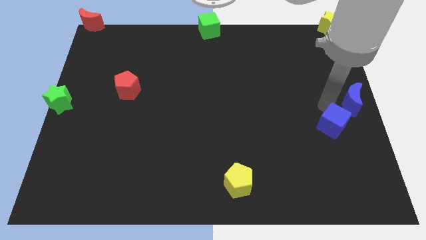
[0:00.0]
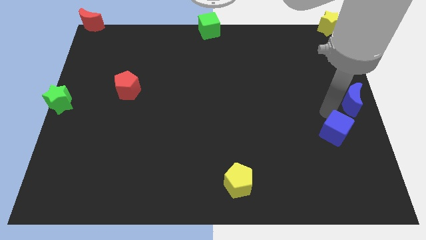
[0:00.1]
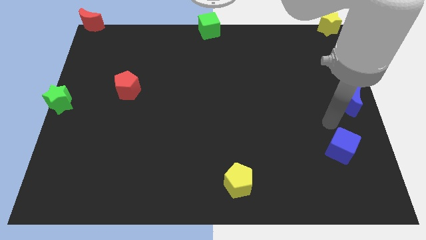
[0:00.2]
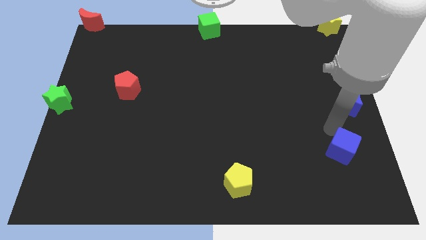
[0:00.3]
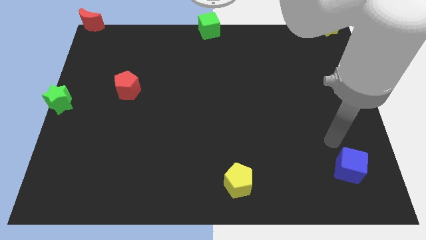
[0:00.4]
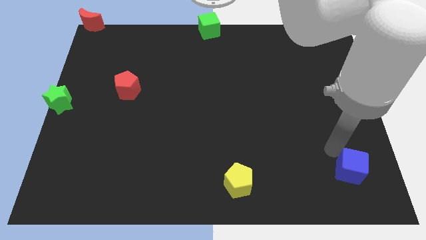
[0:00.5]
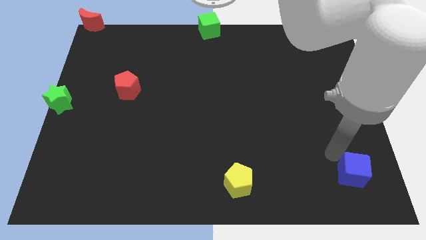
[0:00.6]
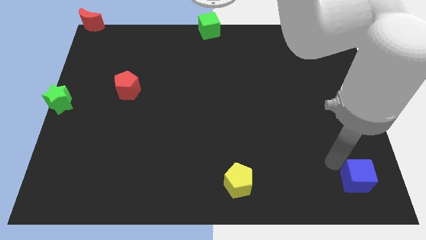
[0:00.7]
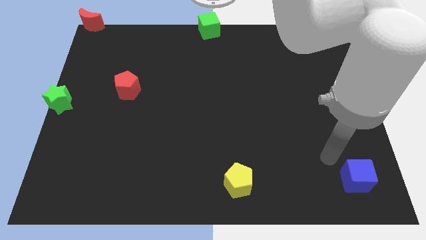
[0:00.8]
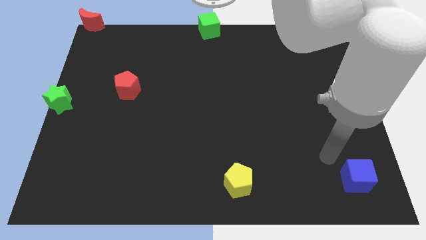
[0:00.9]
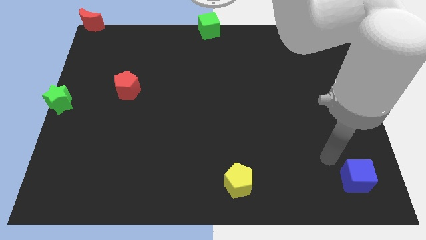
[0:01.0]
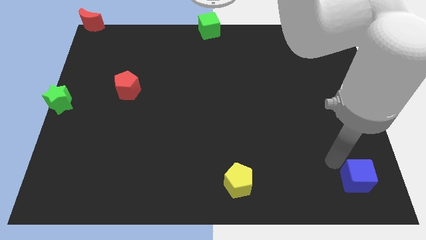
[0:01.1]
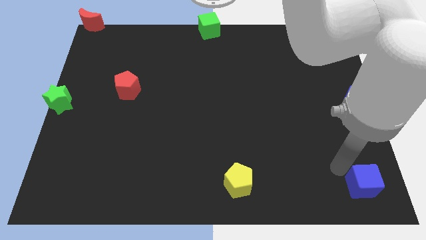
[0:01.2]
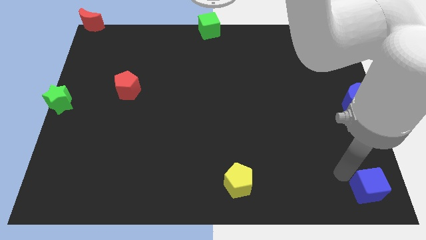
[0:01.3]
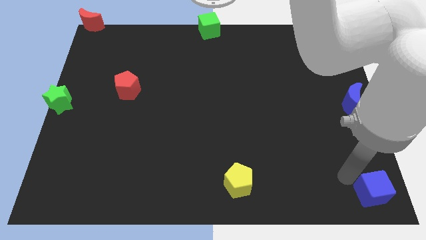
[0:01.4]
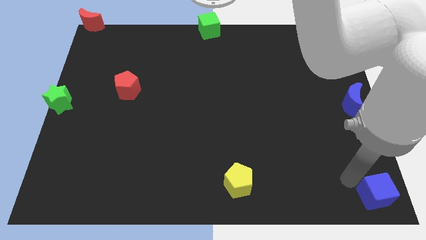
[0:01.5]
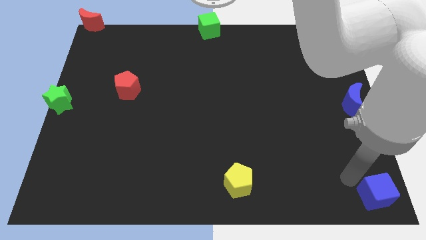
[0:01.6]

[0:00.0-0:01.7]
move the blue cube to the bottom right to the board

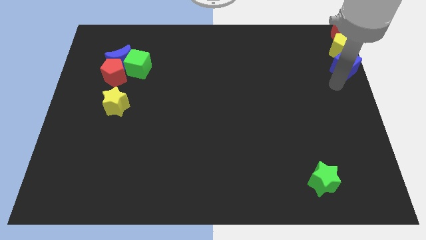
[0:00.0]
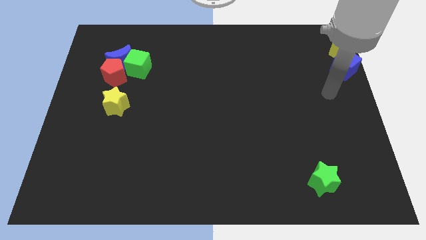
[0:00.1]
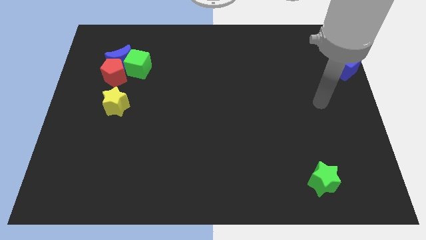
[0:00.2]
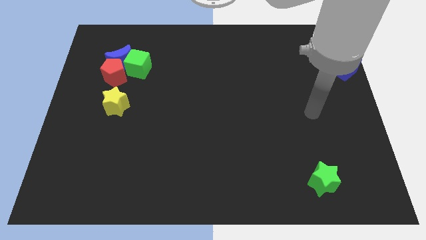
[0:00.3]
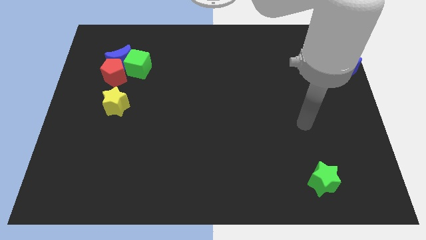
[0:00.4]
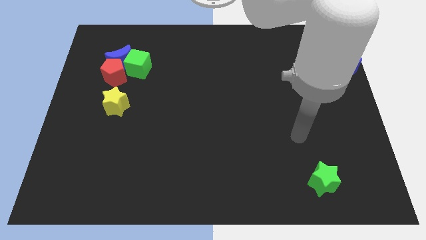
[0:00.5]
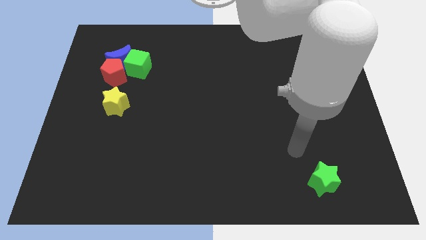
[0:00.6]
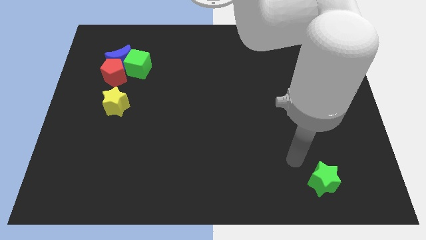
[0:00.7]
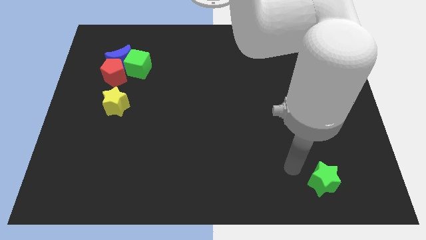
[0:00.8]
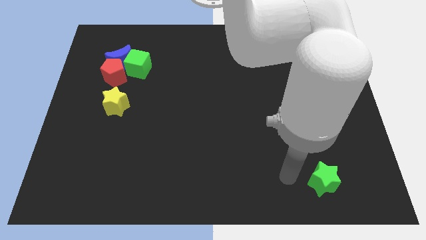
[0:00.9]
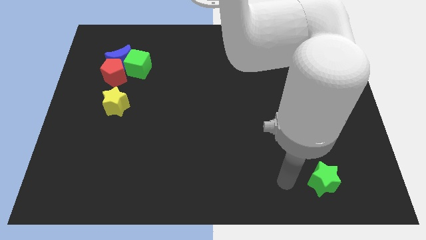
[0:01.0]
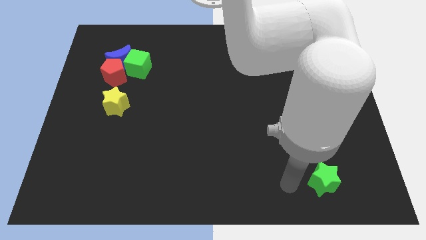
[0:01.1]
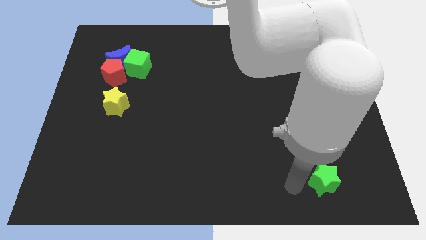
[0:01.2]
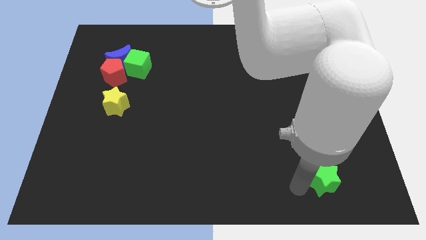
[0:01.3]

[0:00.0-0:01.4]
move your arm away from the blue cube

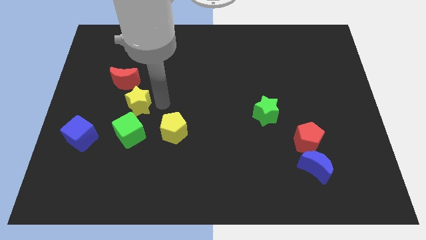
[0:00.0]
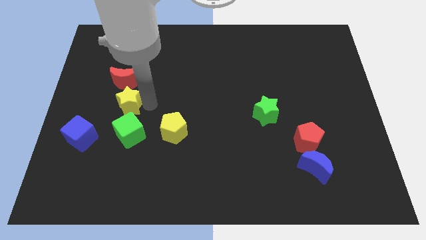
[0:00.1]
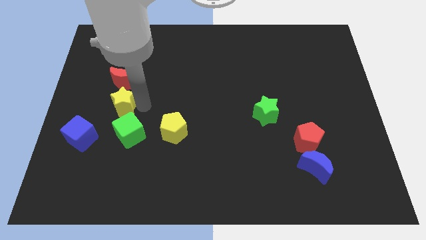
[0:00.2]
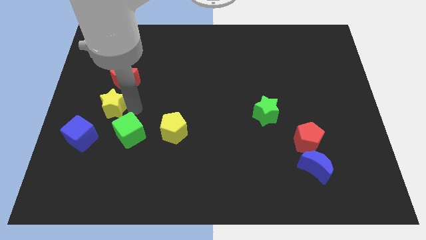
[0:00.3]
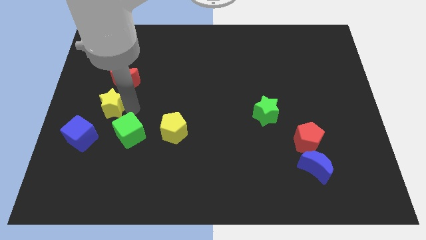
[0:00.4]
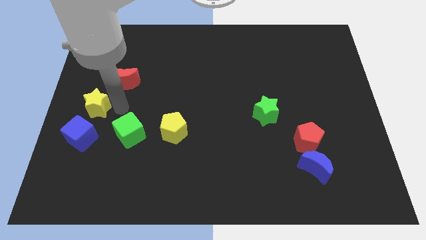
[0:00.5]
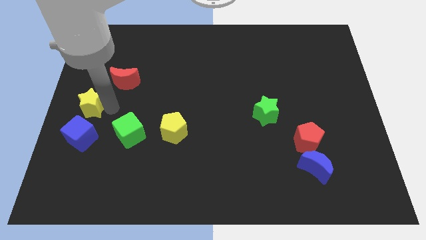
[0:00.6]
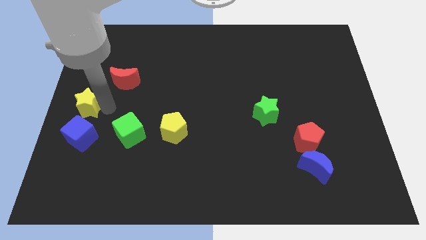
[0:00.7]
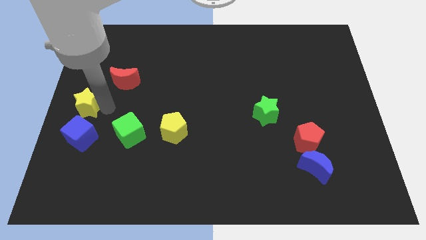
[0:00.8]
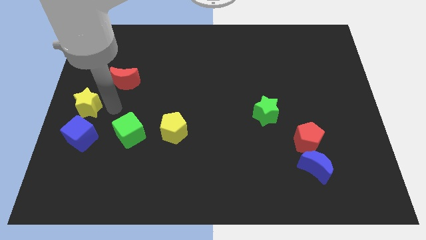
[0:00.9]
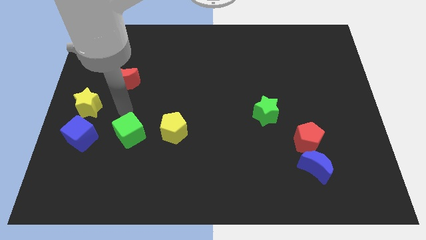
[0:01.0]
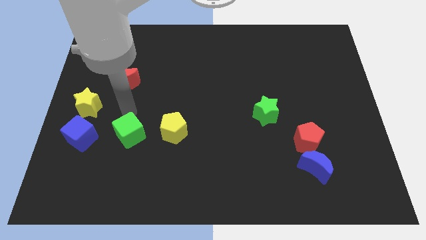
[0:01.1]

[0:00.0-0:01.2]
push the yellow star to the top of the blue cube

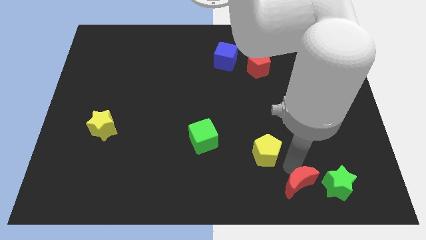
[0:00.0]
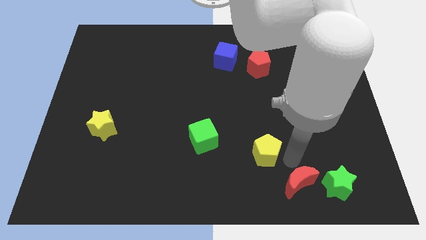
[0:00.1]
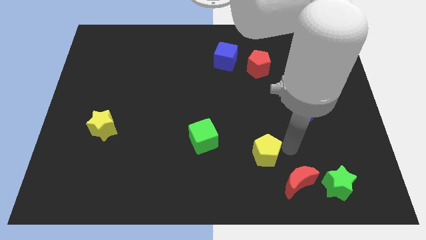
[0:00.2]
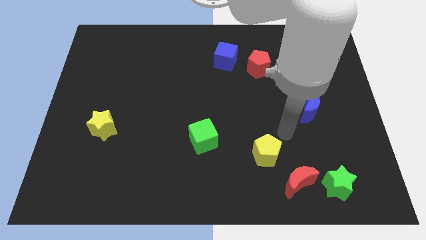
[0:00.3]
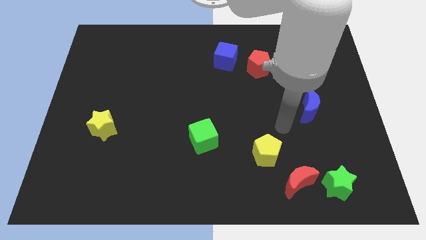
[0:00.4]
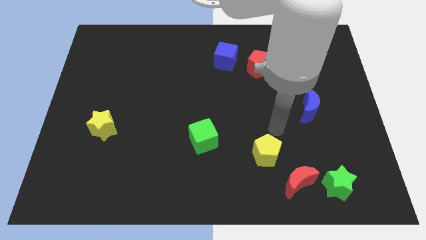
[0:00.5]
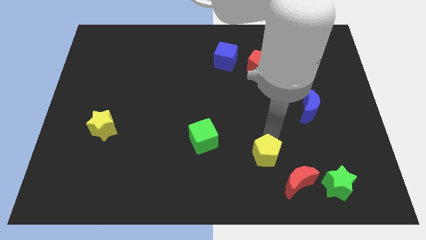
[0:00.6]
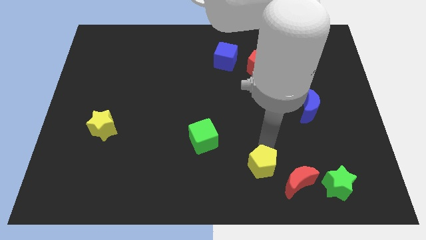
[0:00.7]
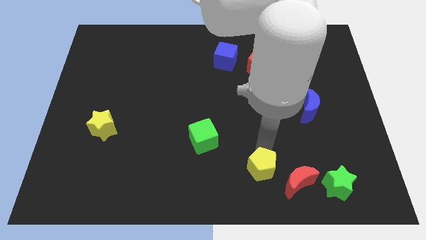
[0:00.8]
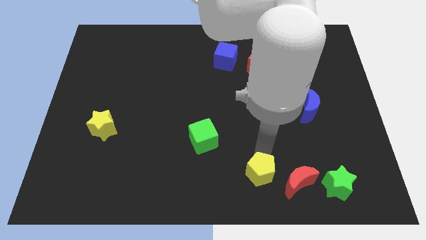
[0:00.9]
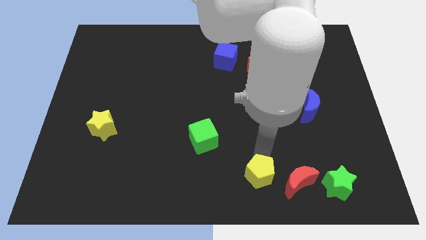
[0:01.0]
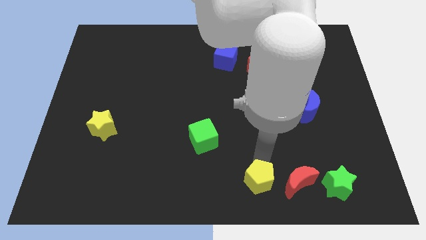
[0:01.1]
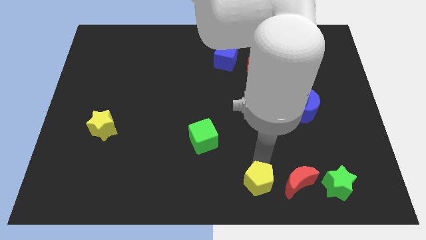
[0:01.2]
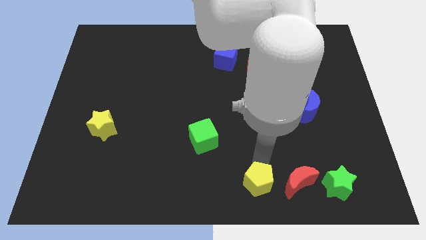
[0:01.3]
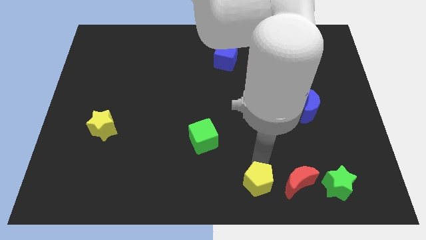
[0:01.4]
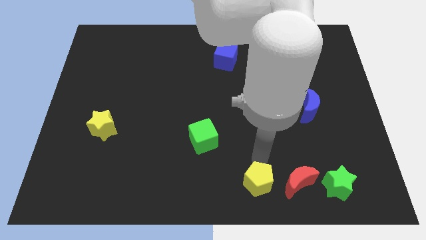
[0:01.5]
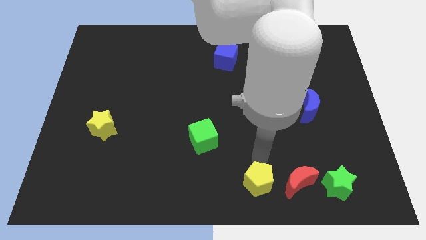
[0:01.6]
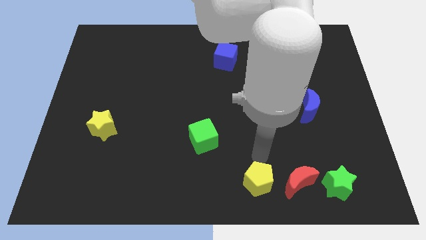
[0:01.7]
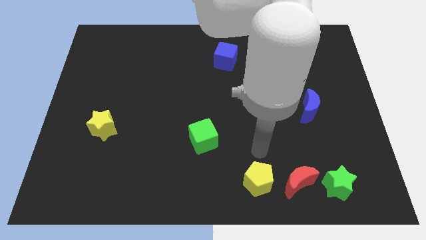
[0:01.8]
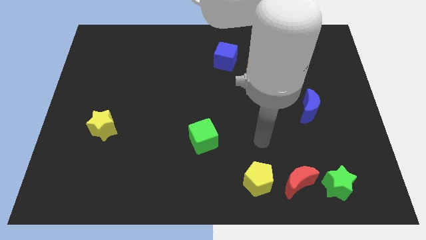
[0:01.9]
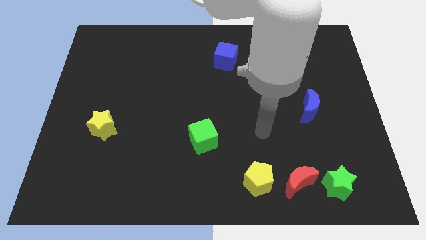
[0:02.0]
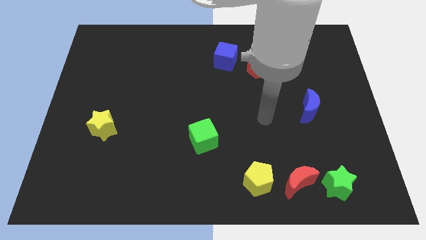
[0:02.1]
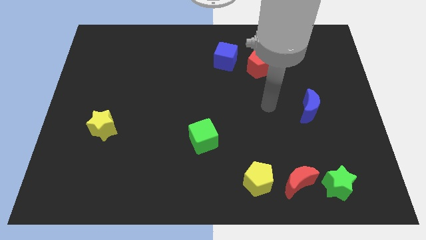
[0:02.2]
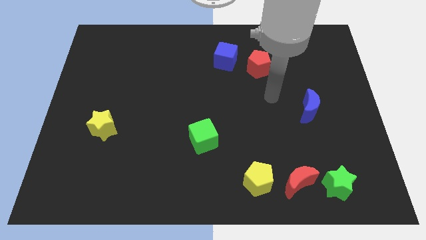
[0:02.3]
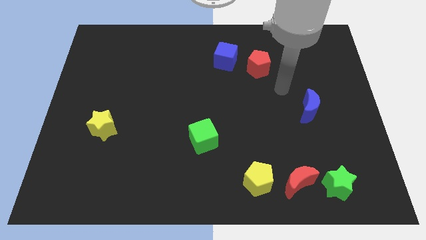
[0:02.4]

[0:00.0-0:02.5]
place the yellow pentagon to the left of red moon

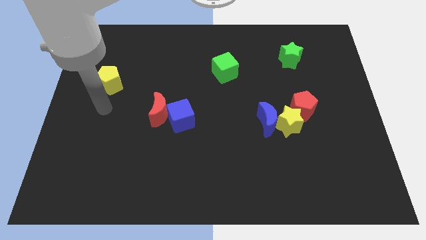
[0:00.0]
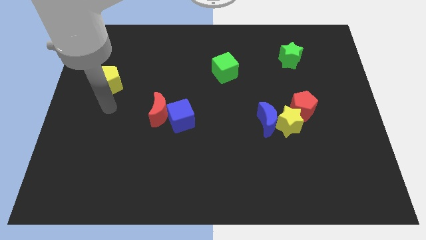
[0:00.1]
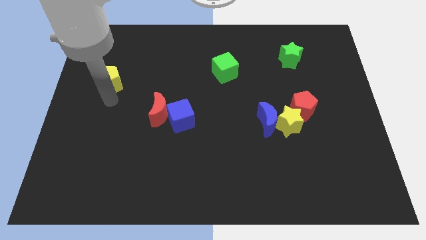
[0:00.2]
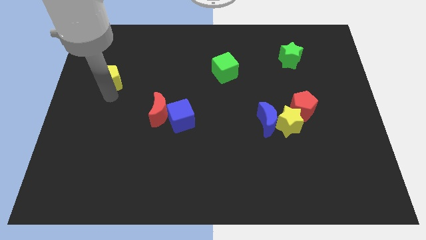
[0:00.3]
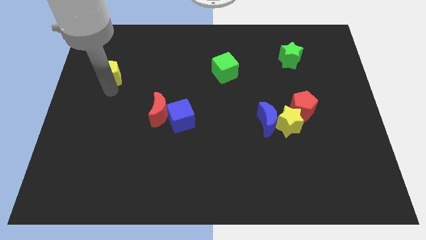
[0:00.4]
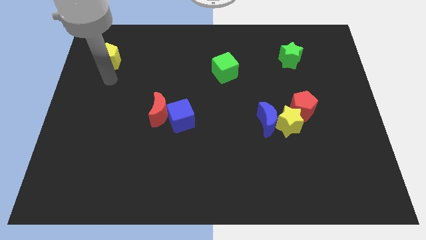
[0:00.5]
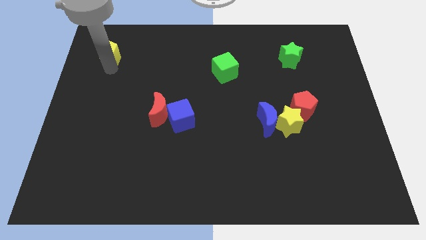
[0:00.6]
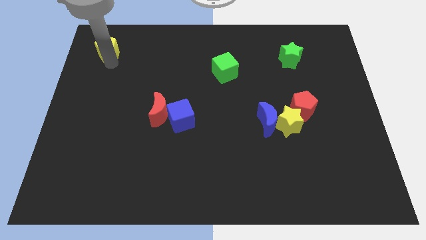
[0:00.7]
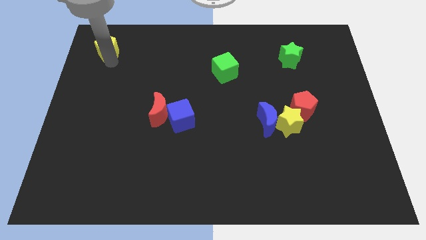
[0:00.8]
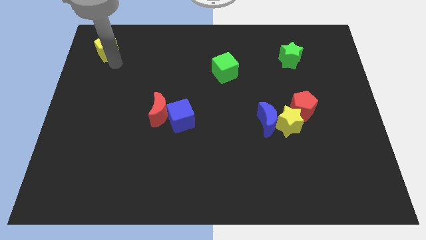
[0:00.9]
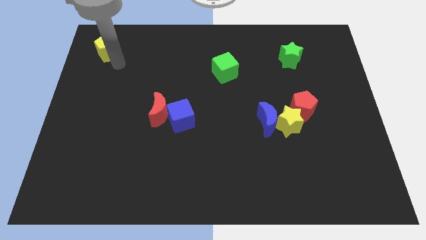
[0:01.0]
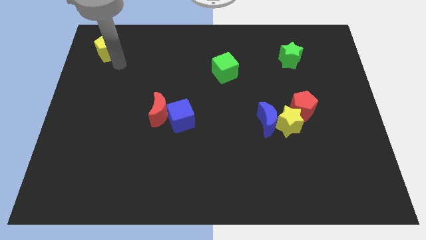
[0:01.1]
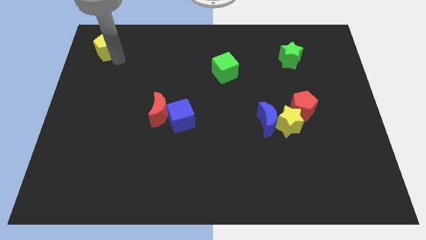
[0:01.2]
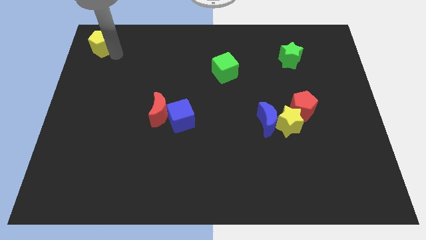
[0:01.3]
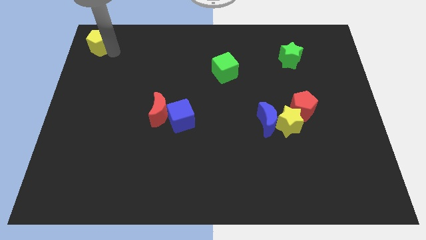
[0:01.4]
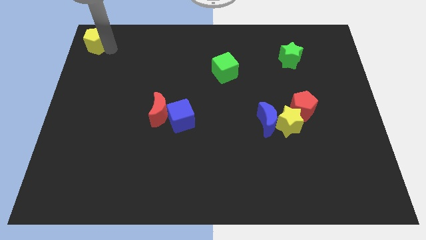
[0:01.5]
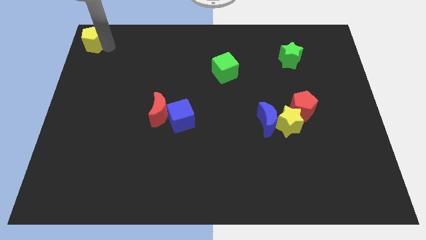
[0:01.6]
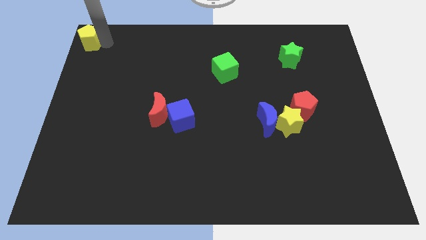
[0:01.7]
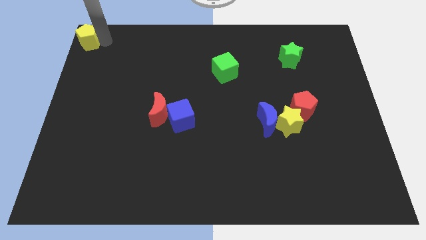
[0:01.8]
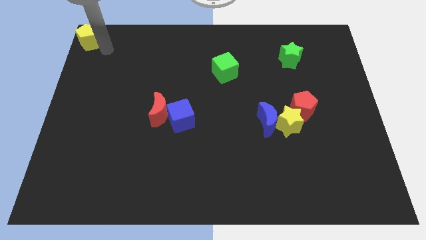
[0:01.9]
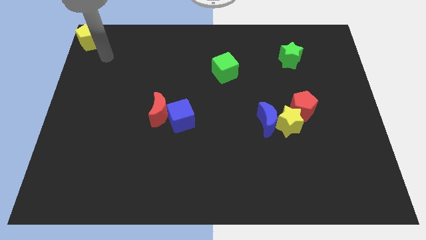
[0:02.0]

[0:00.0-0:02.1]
push the pentagon to the top left corner of the board

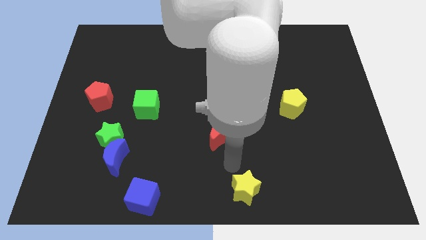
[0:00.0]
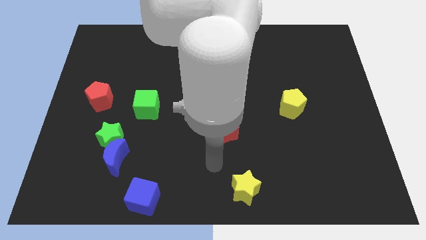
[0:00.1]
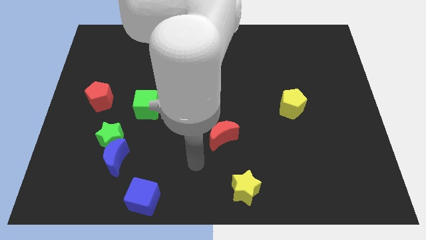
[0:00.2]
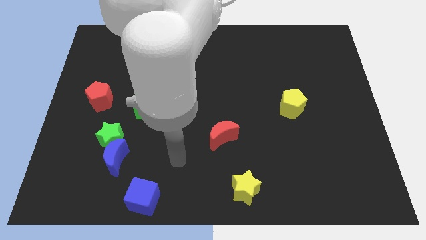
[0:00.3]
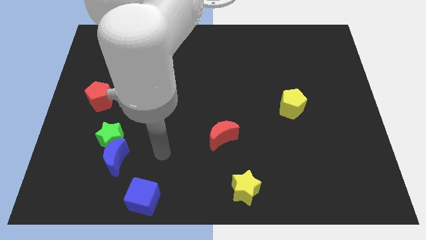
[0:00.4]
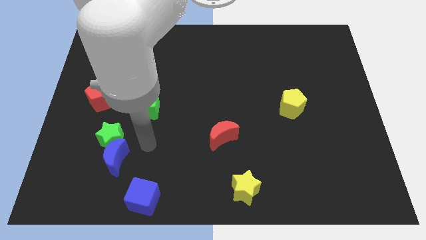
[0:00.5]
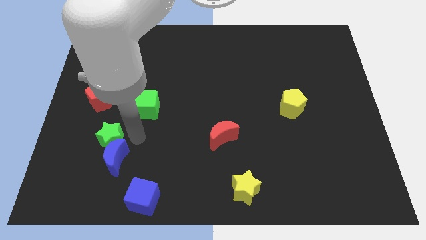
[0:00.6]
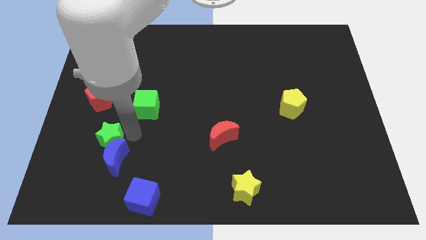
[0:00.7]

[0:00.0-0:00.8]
point your arm to the right side of green star
